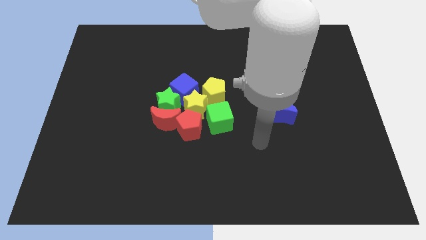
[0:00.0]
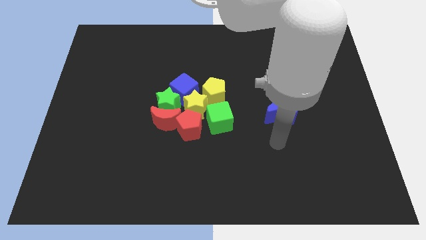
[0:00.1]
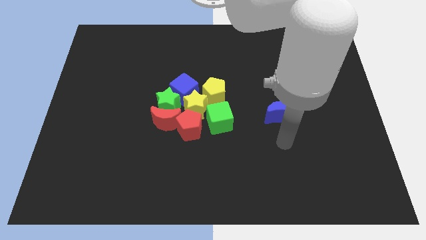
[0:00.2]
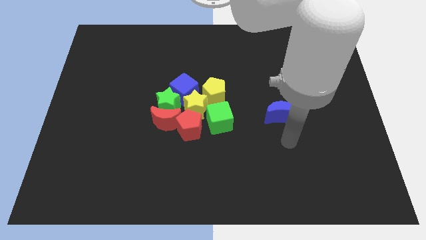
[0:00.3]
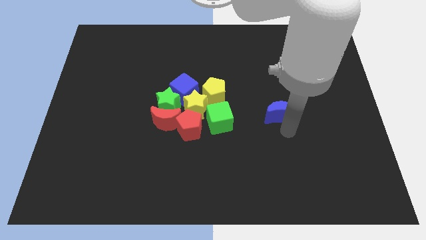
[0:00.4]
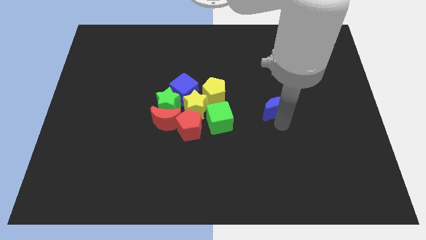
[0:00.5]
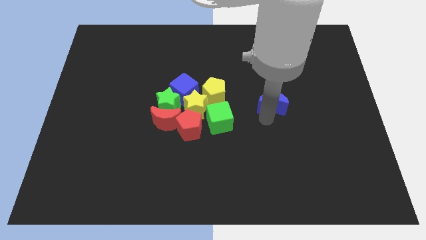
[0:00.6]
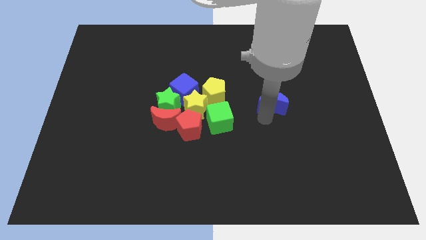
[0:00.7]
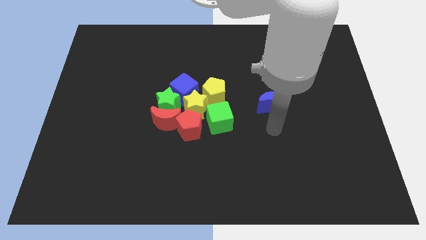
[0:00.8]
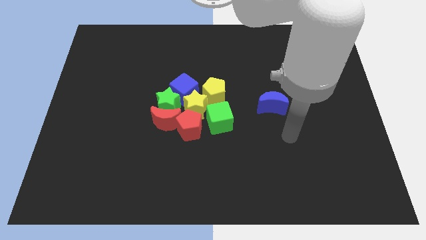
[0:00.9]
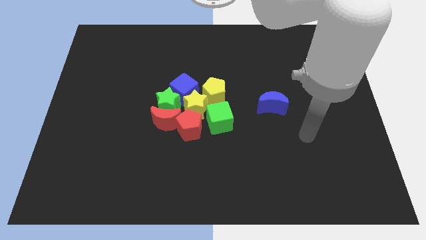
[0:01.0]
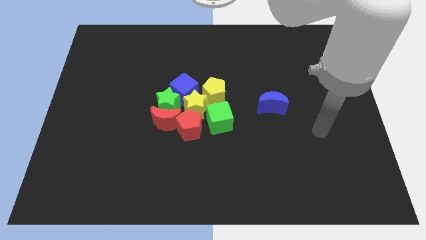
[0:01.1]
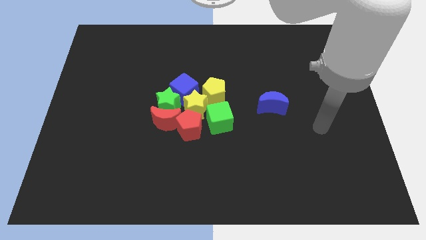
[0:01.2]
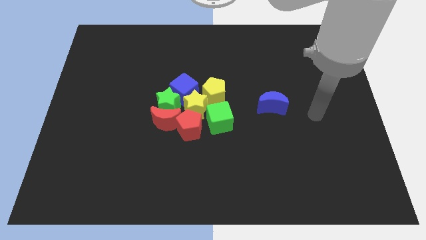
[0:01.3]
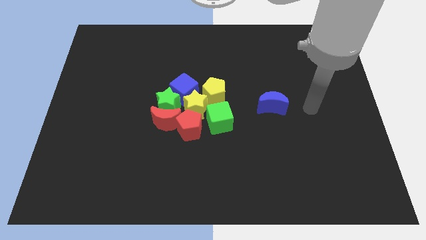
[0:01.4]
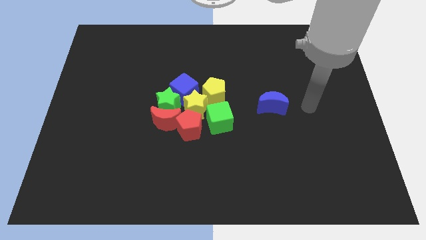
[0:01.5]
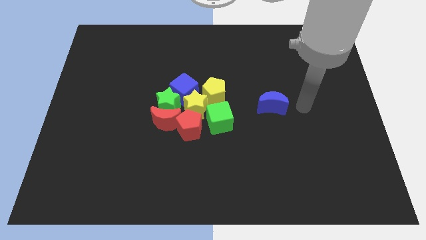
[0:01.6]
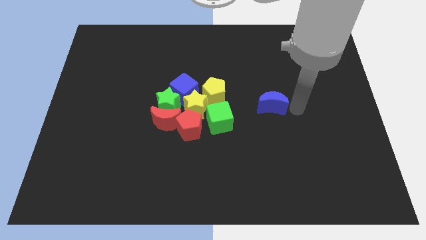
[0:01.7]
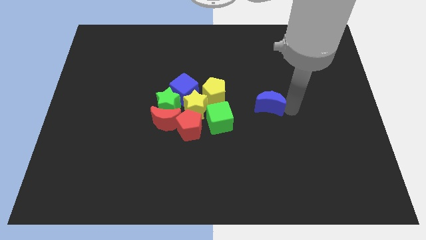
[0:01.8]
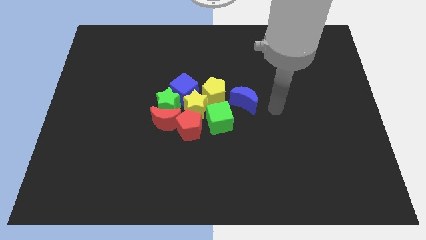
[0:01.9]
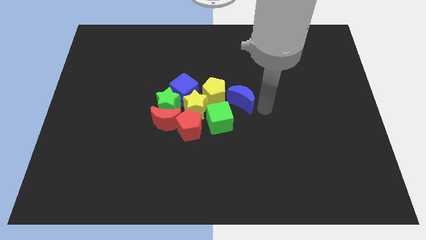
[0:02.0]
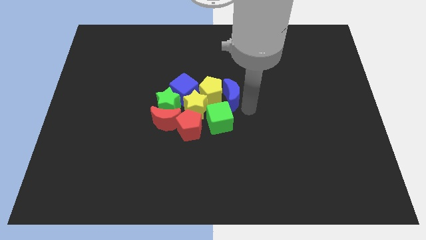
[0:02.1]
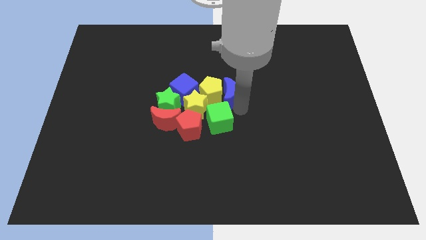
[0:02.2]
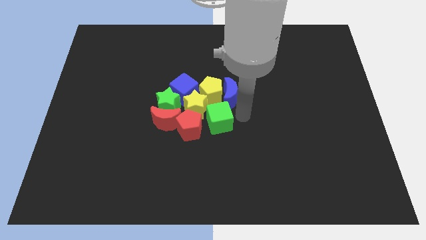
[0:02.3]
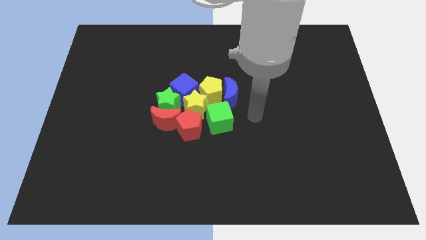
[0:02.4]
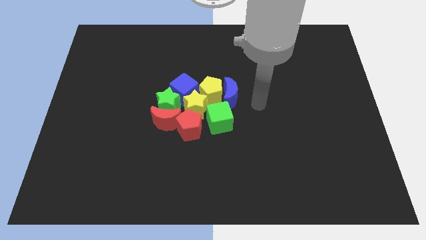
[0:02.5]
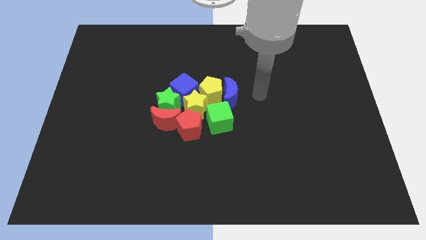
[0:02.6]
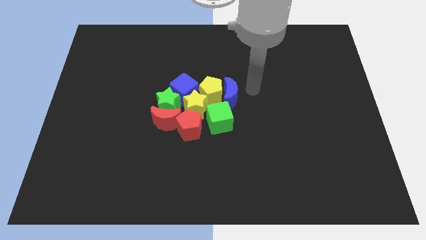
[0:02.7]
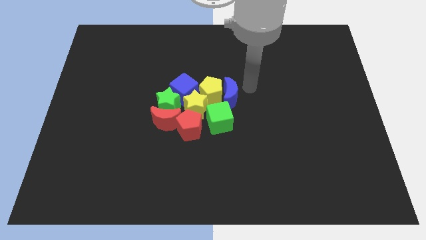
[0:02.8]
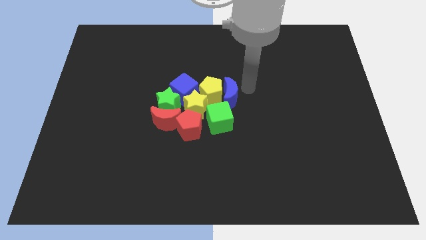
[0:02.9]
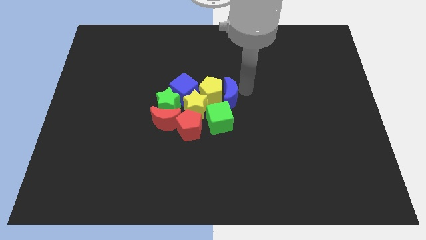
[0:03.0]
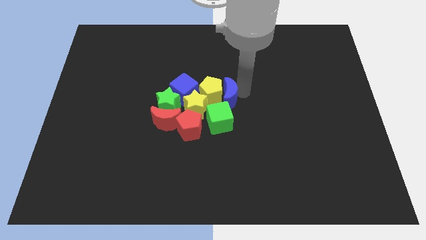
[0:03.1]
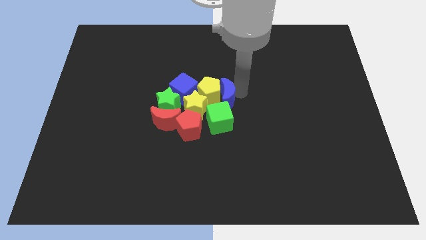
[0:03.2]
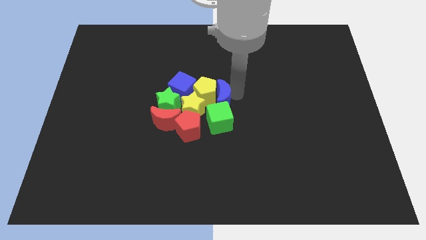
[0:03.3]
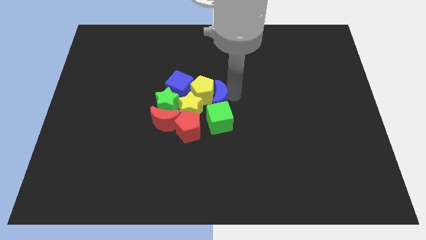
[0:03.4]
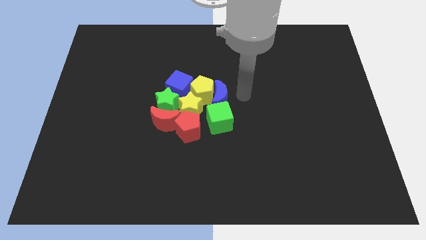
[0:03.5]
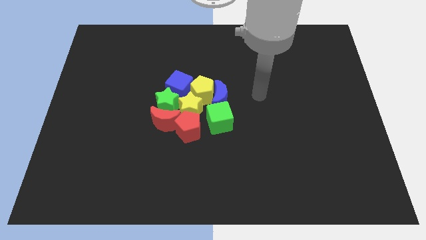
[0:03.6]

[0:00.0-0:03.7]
push the blue crescent into the yellow pentagon

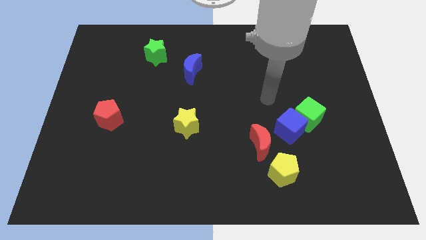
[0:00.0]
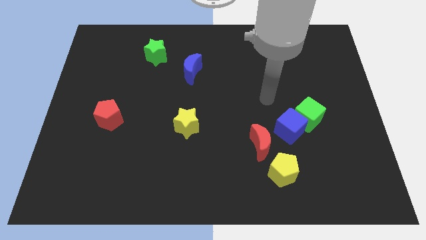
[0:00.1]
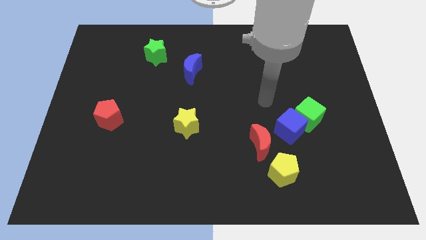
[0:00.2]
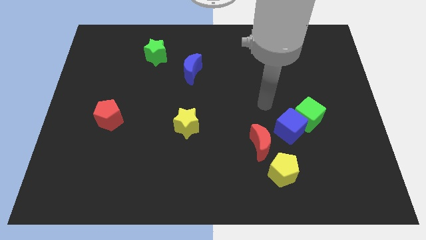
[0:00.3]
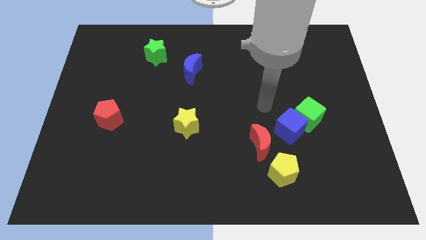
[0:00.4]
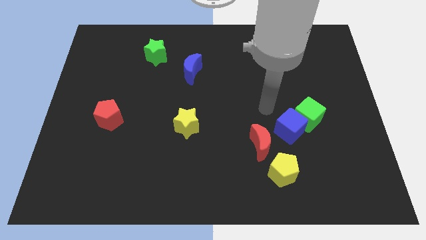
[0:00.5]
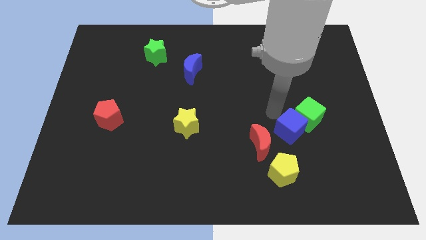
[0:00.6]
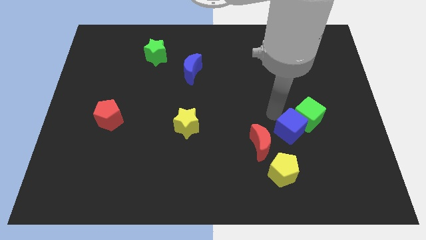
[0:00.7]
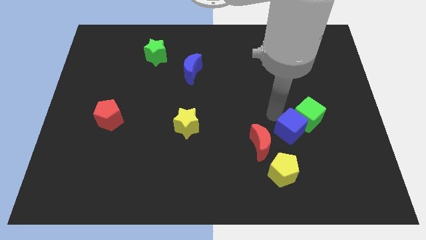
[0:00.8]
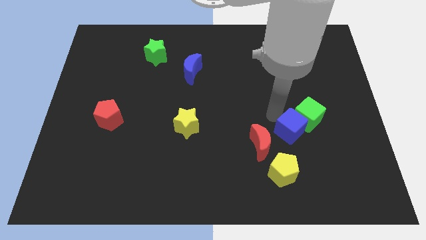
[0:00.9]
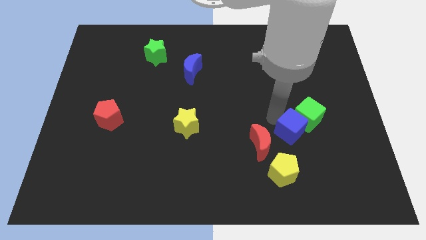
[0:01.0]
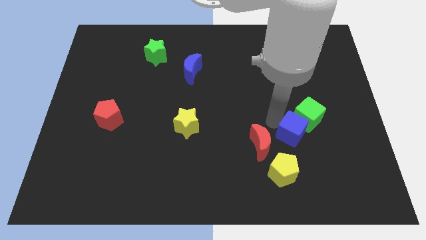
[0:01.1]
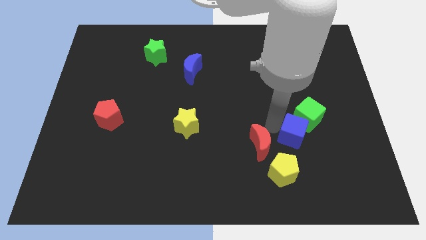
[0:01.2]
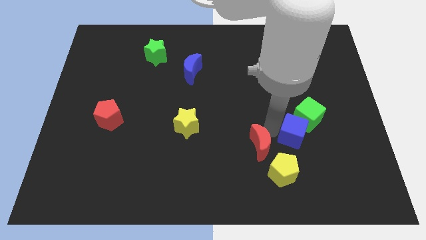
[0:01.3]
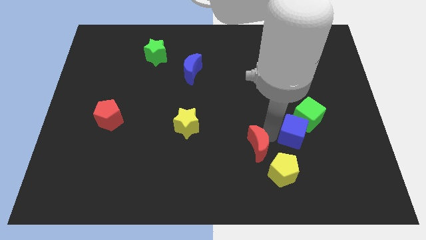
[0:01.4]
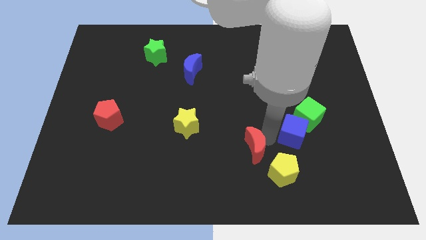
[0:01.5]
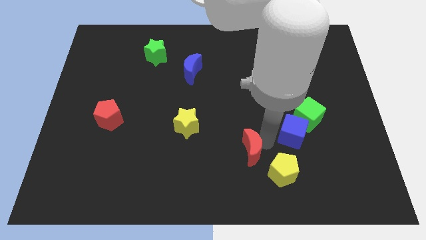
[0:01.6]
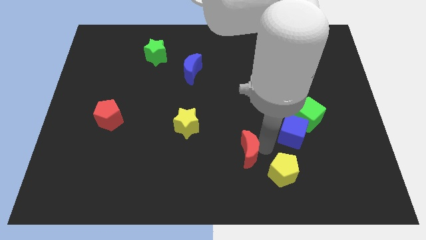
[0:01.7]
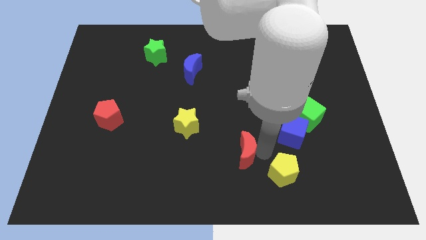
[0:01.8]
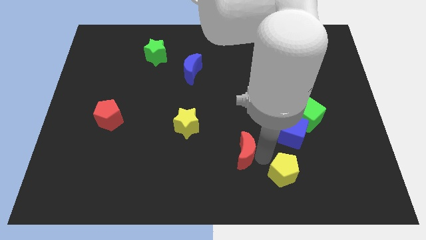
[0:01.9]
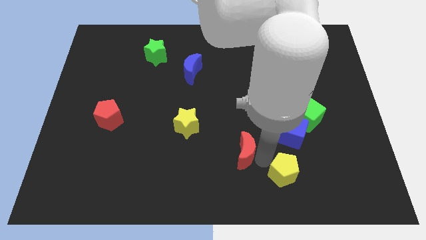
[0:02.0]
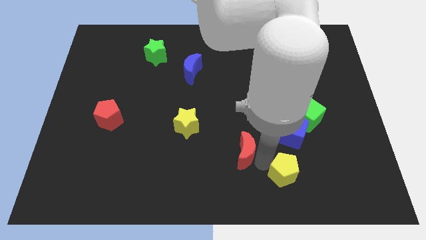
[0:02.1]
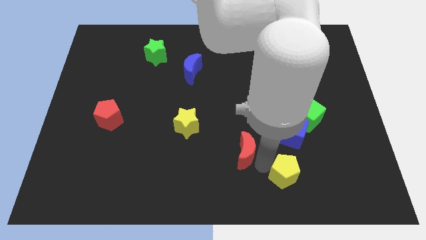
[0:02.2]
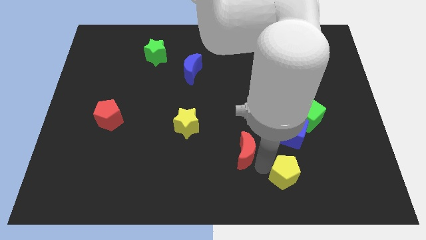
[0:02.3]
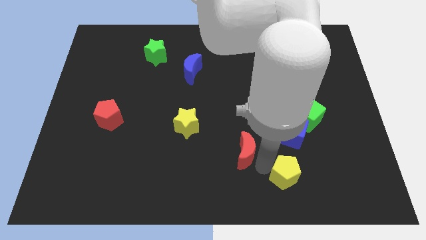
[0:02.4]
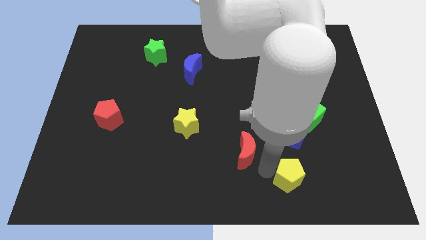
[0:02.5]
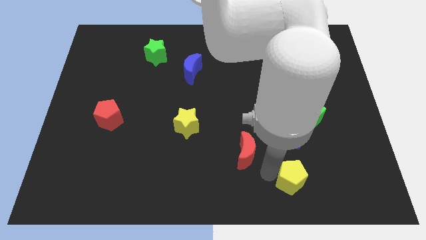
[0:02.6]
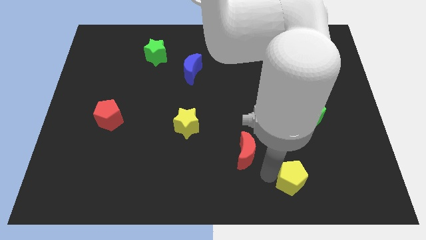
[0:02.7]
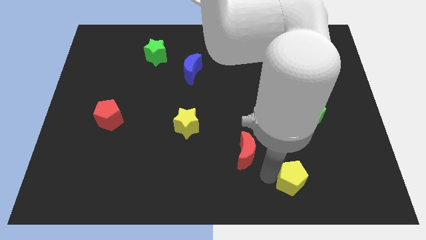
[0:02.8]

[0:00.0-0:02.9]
move your arm close to the yellow pentagon

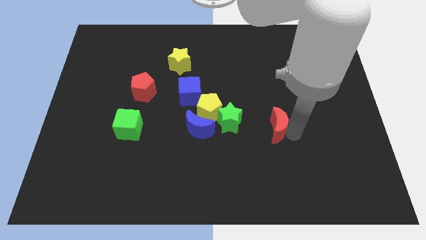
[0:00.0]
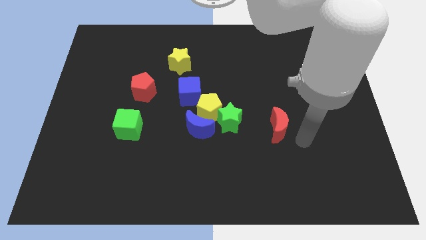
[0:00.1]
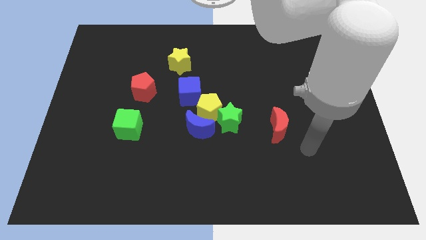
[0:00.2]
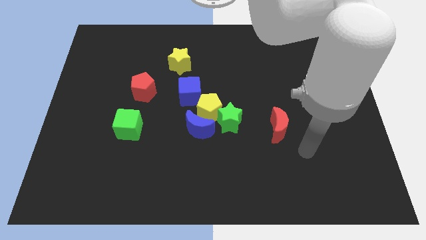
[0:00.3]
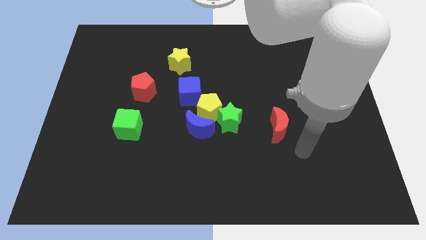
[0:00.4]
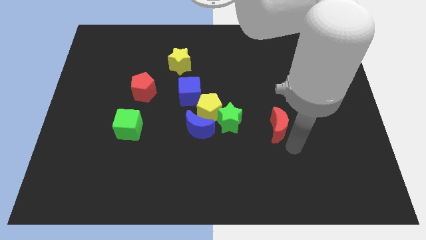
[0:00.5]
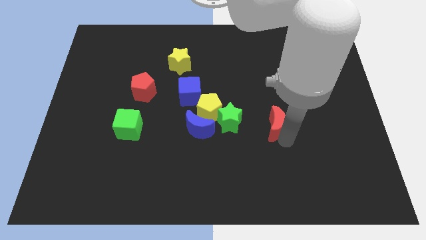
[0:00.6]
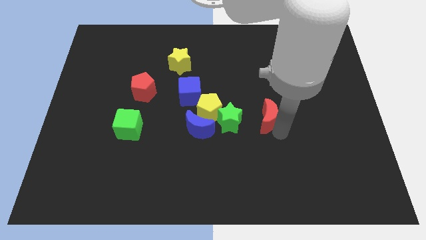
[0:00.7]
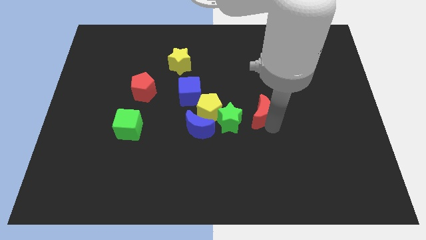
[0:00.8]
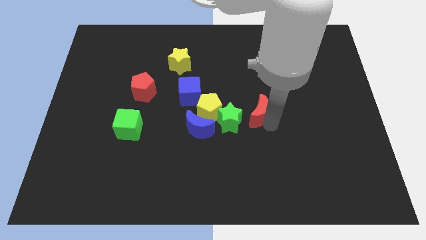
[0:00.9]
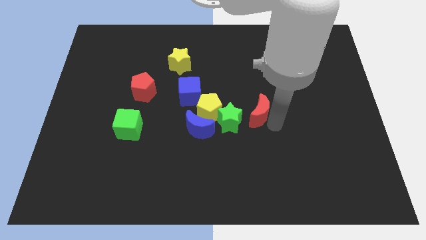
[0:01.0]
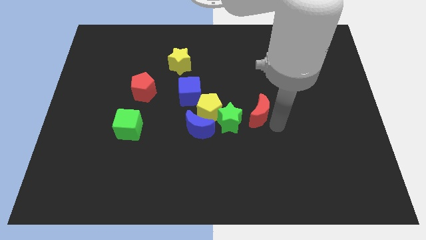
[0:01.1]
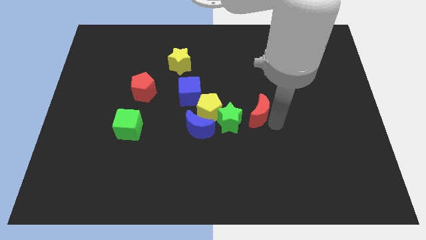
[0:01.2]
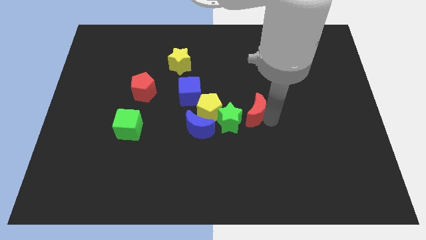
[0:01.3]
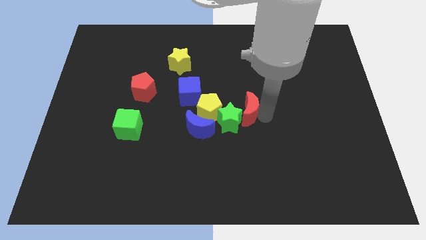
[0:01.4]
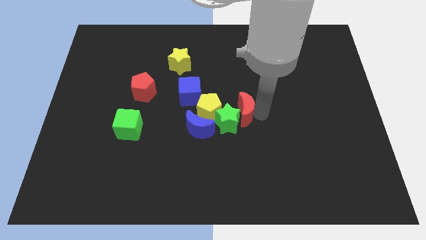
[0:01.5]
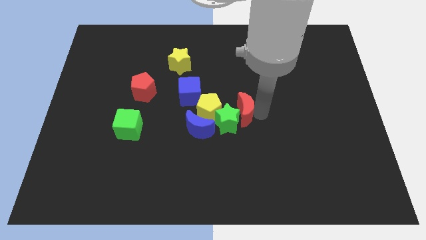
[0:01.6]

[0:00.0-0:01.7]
slide the red moon diagonally top right to the green star

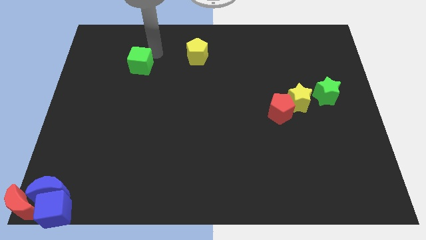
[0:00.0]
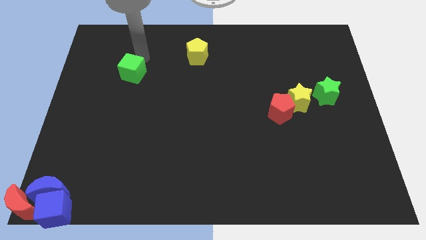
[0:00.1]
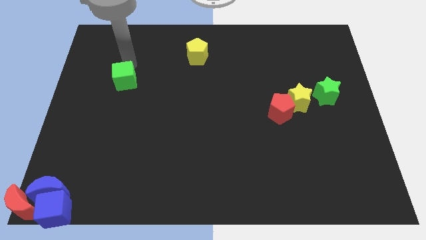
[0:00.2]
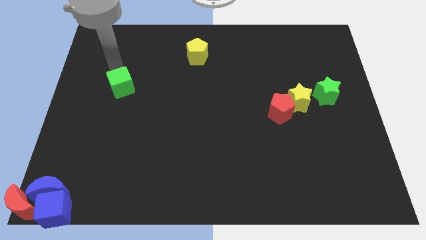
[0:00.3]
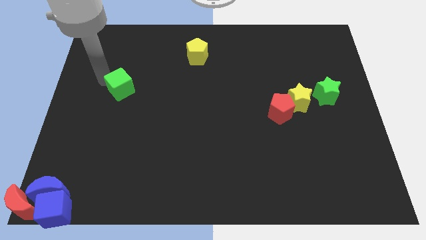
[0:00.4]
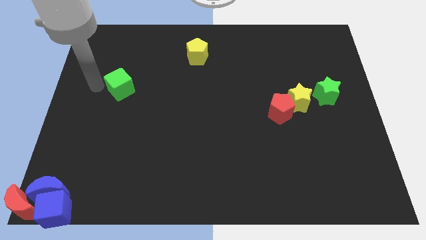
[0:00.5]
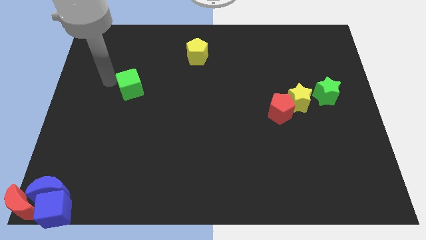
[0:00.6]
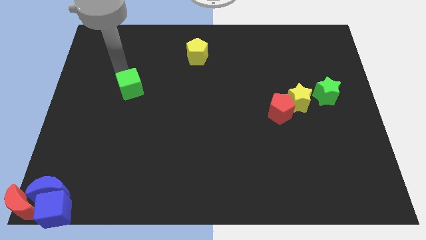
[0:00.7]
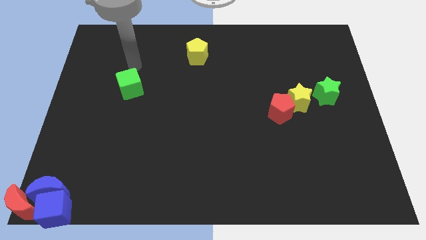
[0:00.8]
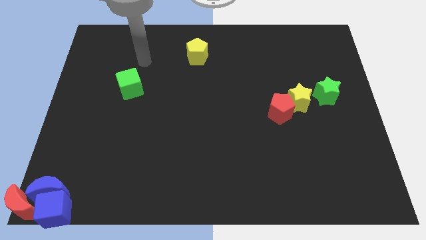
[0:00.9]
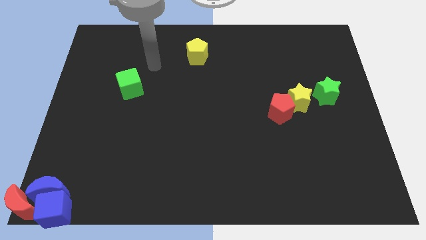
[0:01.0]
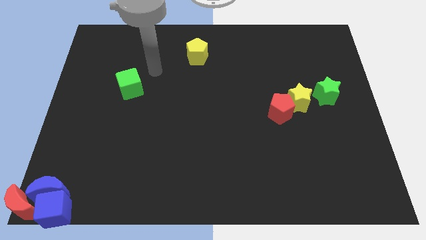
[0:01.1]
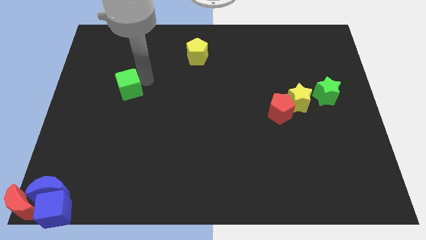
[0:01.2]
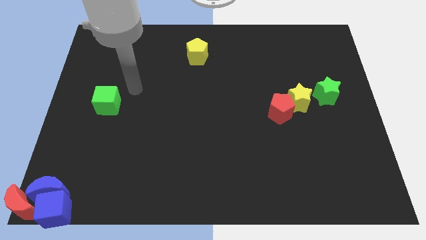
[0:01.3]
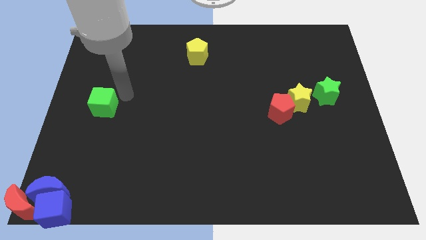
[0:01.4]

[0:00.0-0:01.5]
push the green cube towards the bottom
